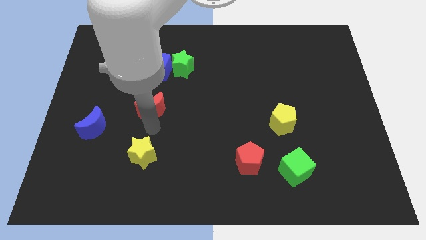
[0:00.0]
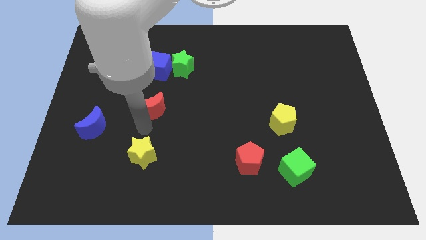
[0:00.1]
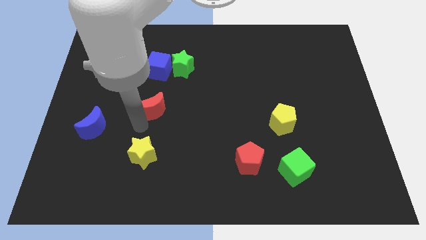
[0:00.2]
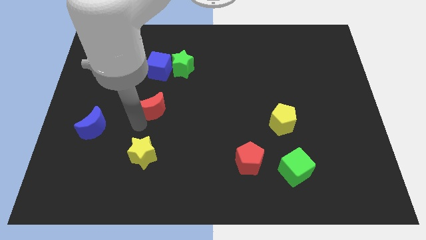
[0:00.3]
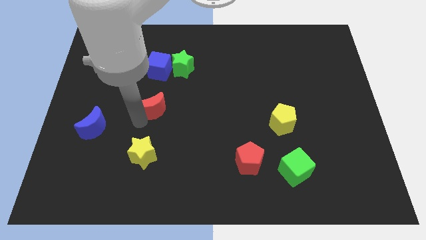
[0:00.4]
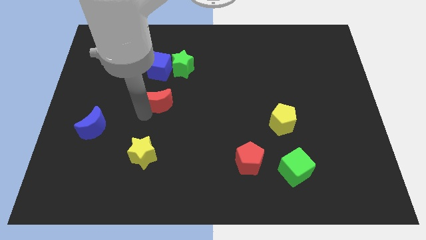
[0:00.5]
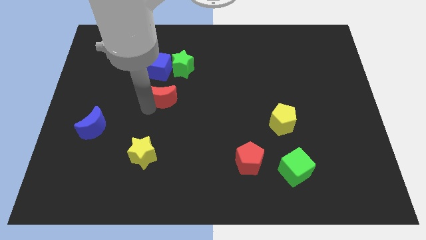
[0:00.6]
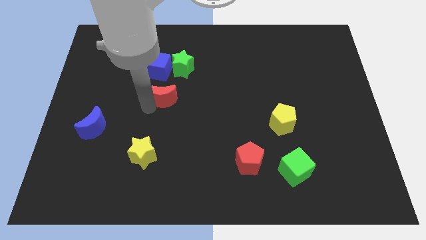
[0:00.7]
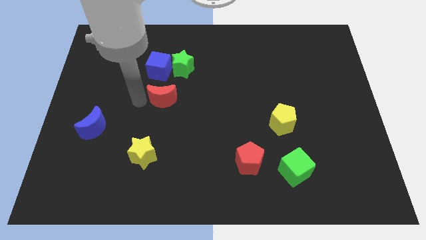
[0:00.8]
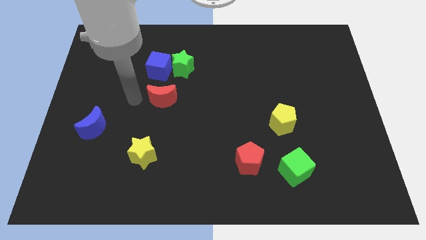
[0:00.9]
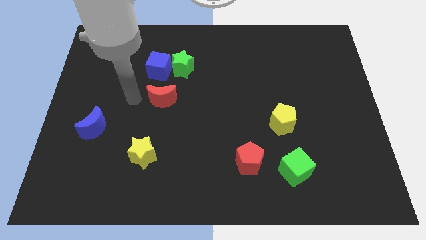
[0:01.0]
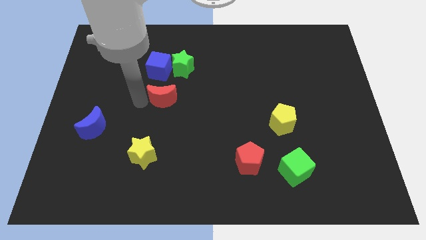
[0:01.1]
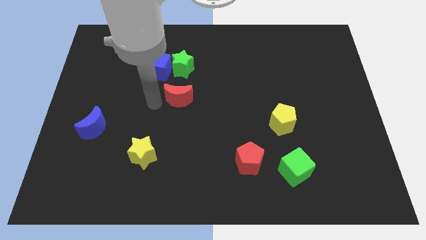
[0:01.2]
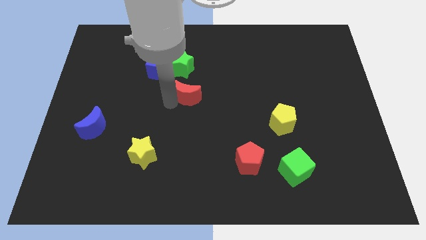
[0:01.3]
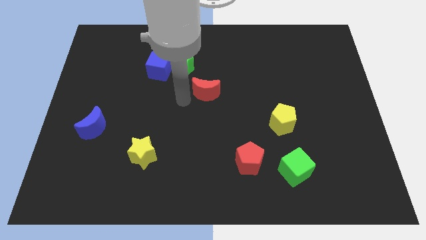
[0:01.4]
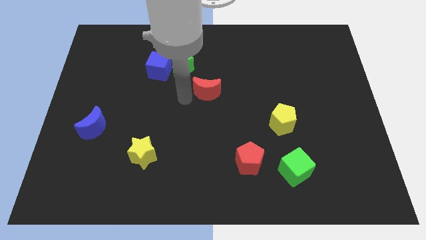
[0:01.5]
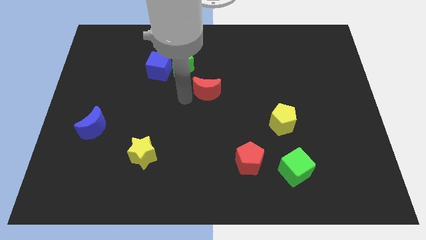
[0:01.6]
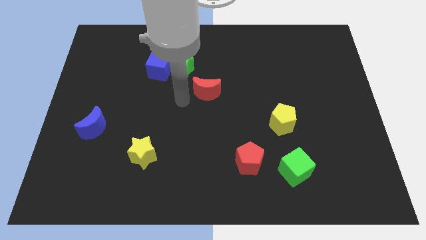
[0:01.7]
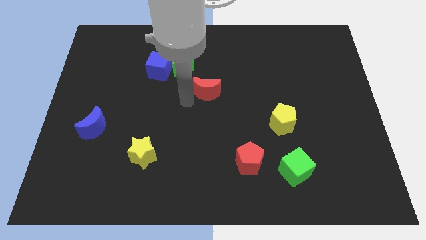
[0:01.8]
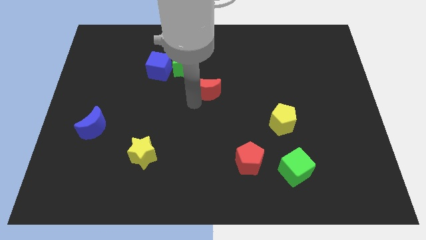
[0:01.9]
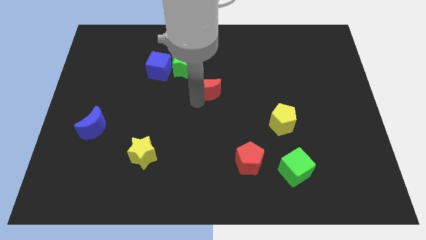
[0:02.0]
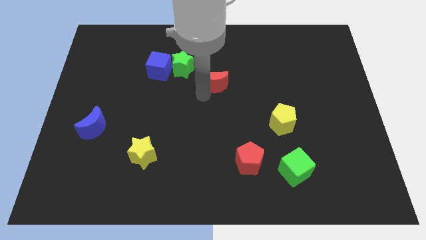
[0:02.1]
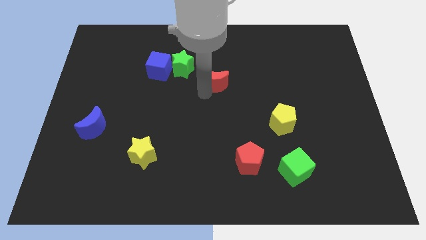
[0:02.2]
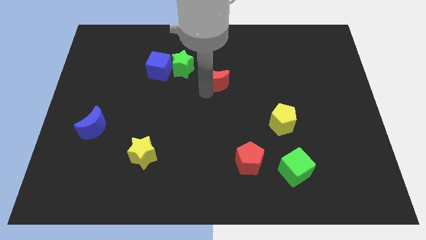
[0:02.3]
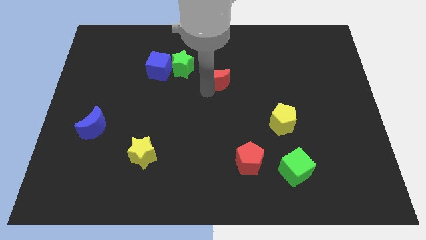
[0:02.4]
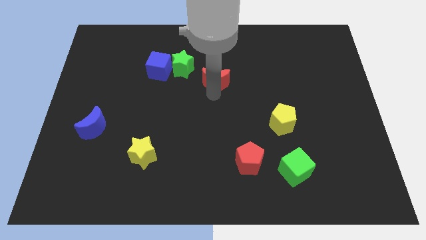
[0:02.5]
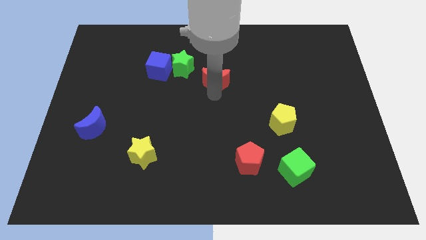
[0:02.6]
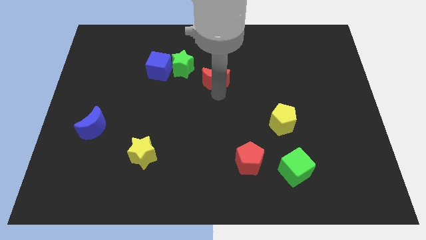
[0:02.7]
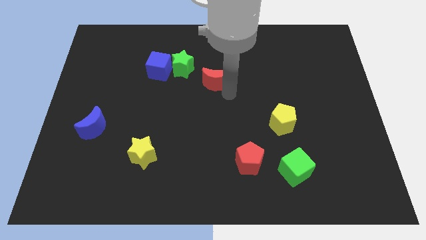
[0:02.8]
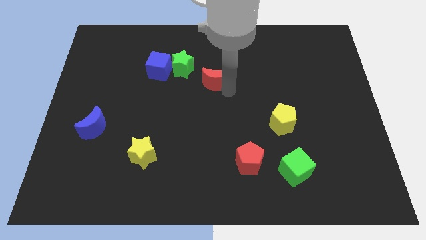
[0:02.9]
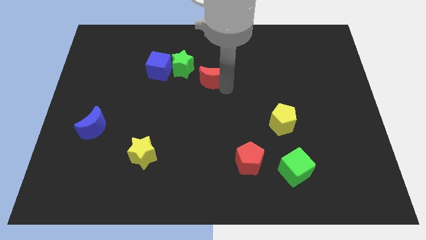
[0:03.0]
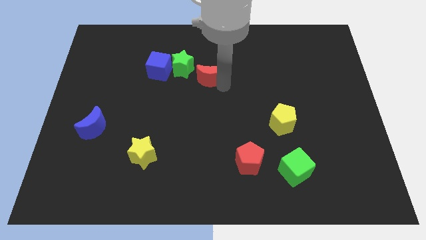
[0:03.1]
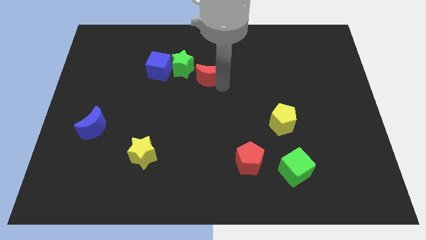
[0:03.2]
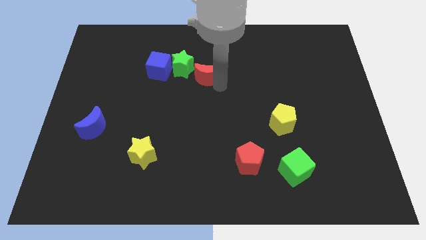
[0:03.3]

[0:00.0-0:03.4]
move the red moon right to the green star

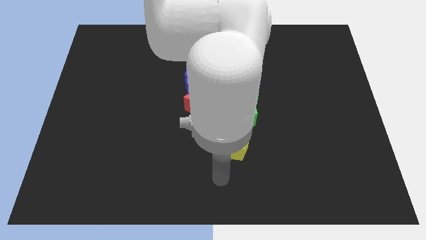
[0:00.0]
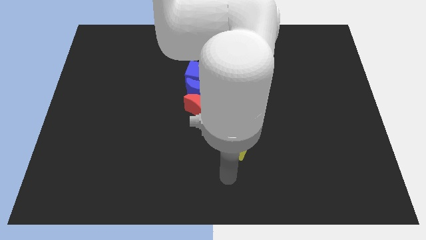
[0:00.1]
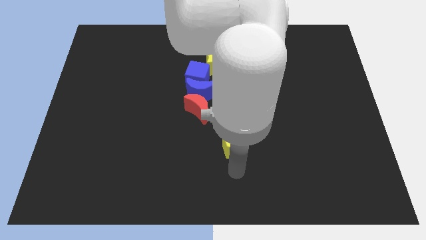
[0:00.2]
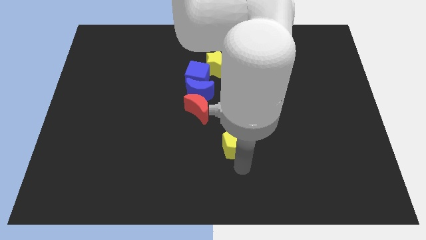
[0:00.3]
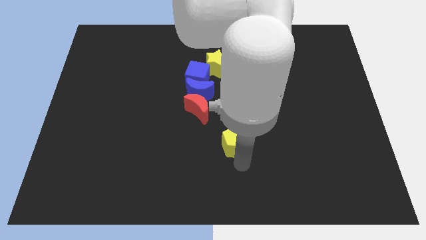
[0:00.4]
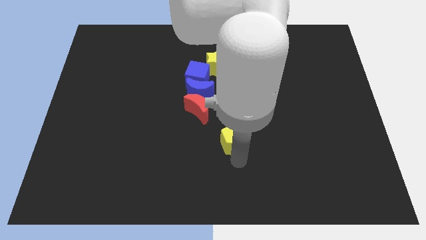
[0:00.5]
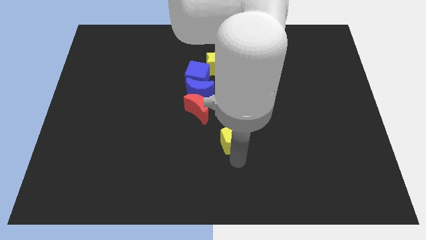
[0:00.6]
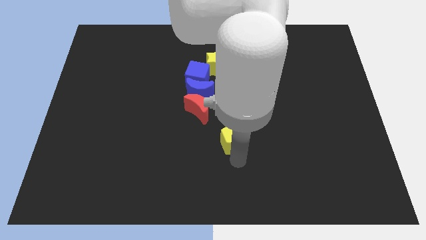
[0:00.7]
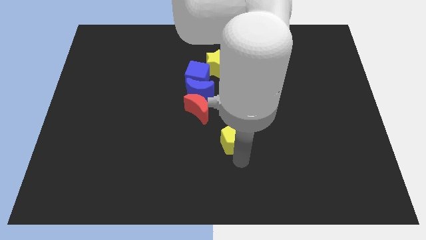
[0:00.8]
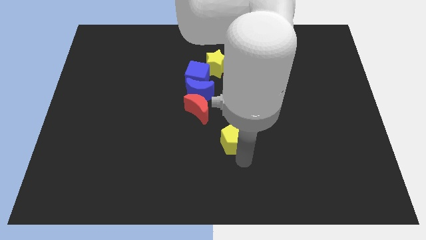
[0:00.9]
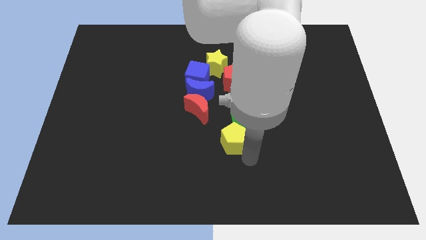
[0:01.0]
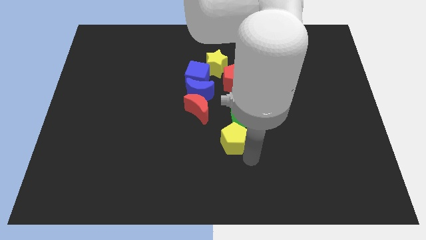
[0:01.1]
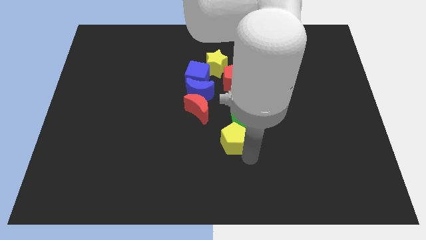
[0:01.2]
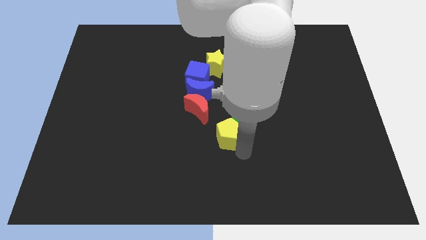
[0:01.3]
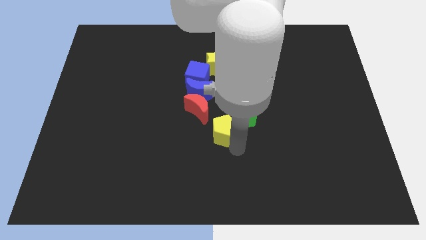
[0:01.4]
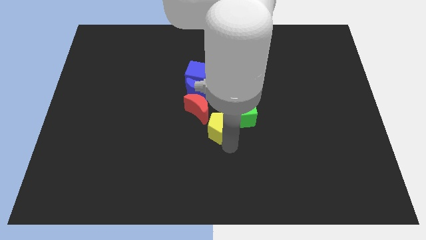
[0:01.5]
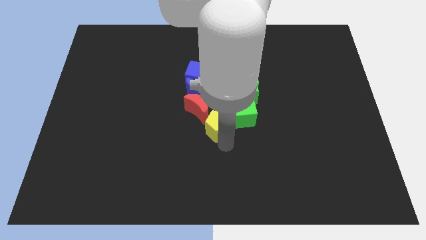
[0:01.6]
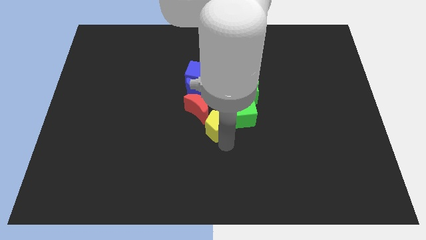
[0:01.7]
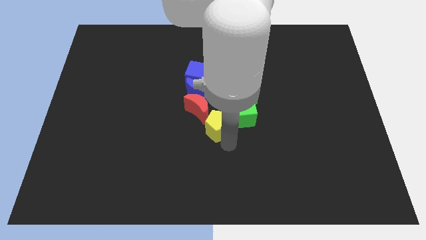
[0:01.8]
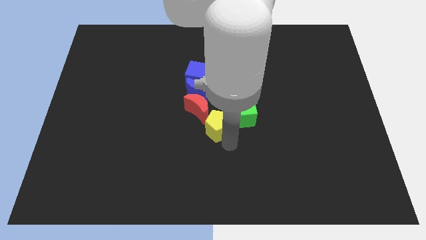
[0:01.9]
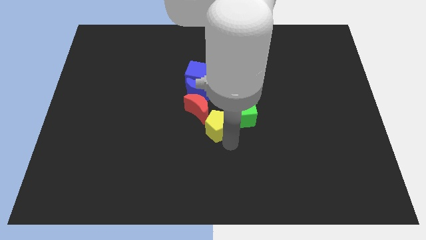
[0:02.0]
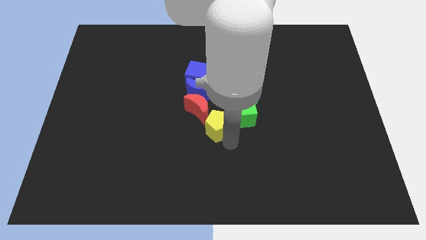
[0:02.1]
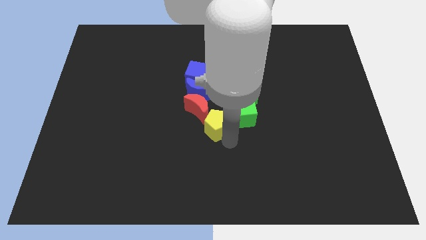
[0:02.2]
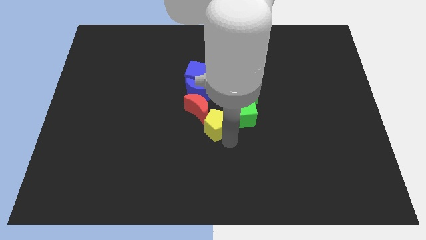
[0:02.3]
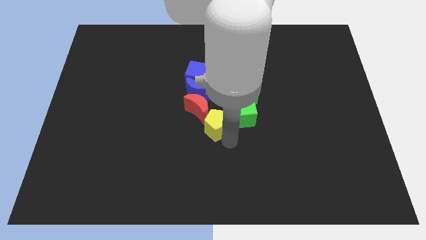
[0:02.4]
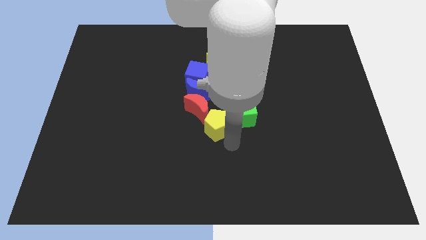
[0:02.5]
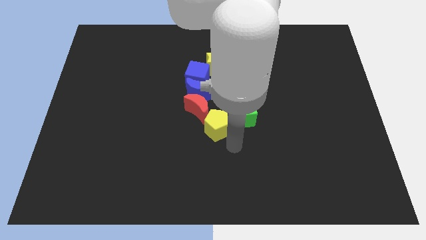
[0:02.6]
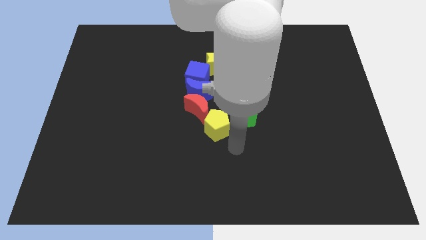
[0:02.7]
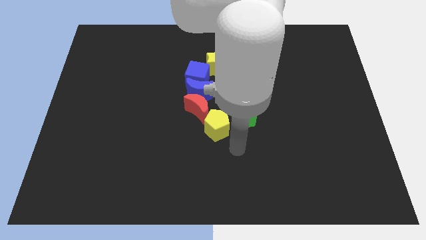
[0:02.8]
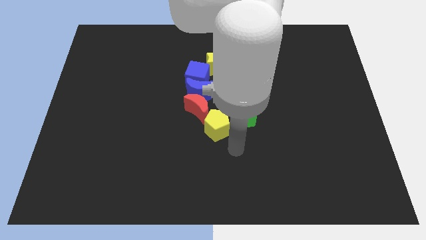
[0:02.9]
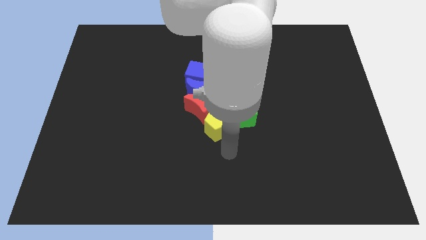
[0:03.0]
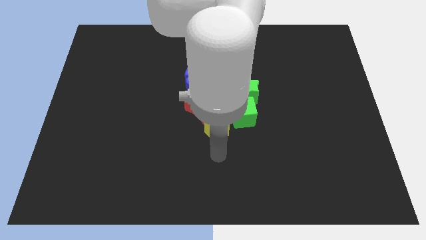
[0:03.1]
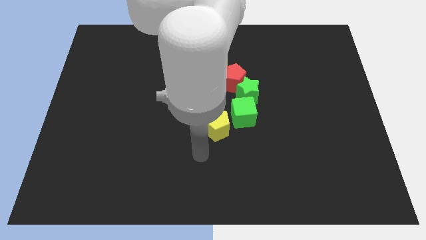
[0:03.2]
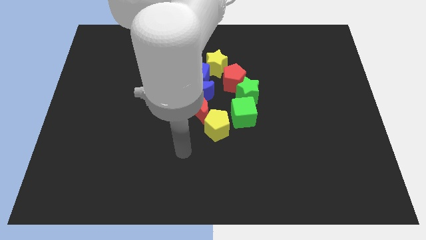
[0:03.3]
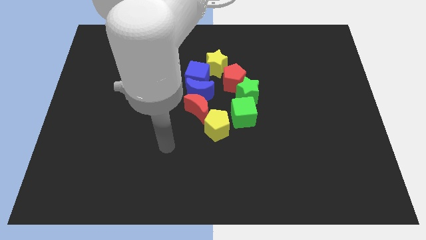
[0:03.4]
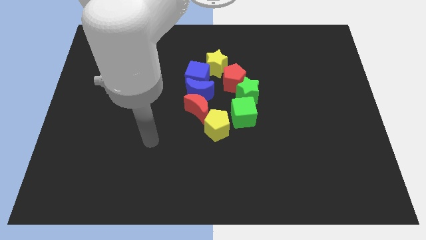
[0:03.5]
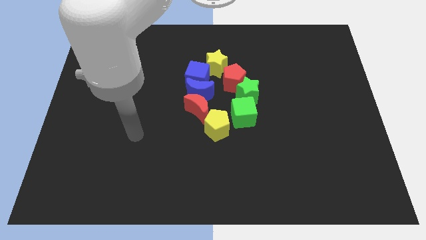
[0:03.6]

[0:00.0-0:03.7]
move yellow pentagon below right to red moon

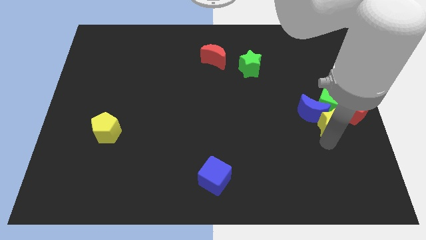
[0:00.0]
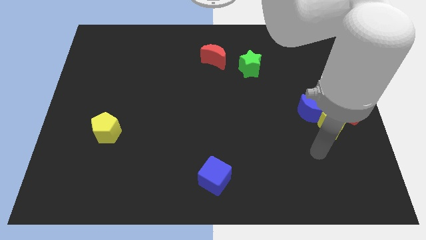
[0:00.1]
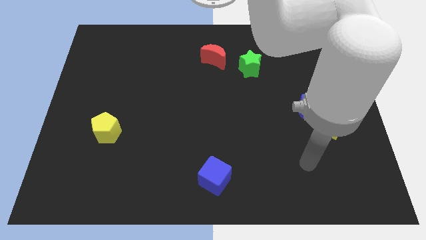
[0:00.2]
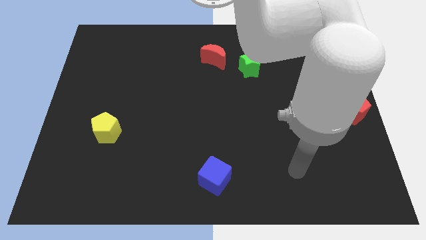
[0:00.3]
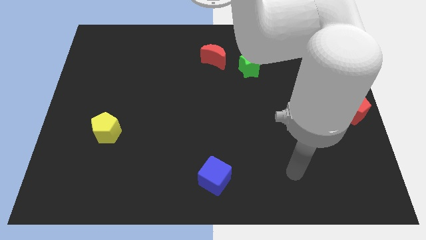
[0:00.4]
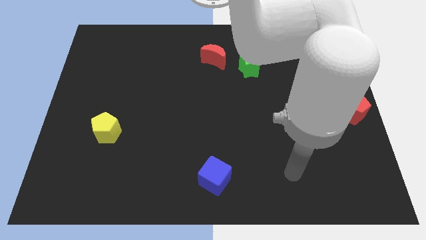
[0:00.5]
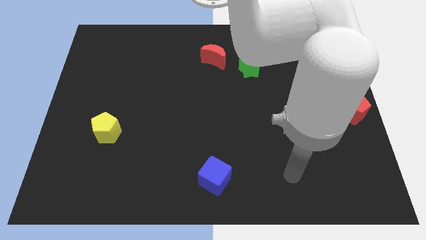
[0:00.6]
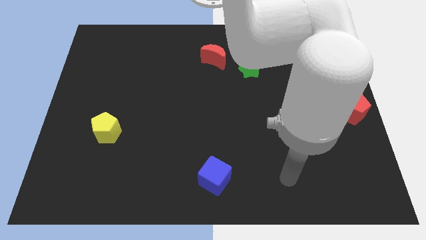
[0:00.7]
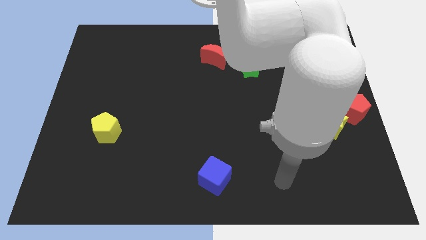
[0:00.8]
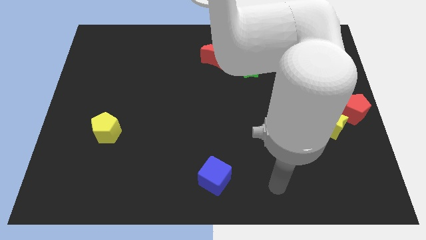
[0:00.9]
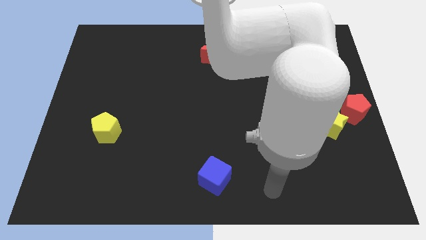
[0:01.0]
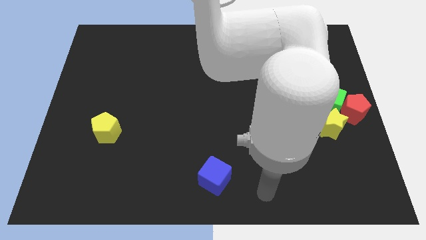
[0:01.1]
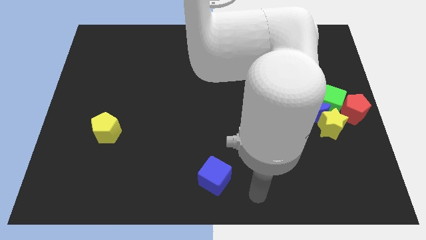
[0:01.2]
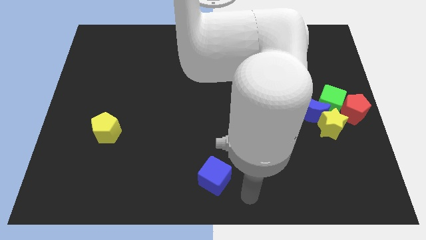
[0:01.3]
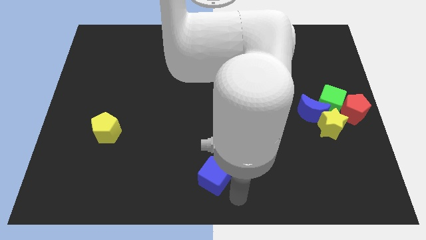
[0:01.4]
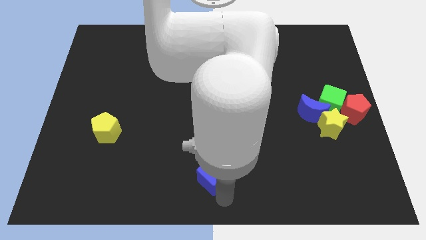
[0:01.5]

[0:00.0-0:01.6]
move the arm away from the yellow star

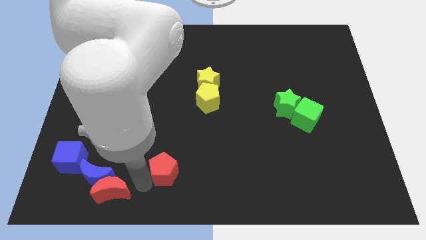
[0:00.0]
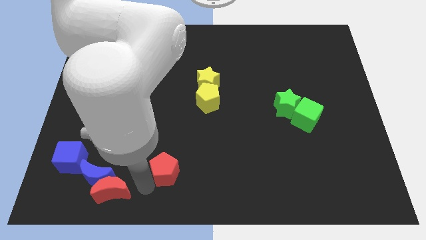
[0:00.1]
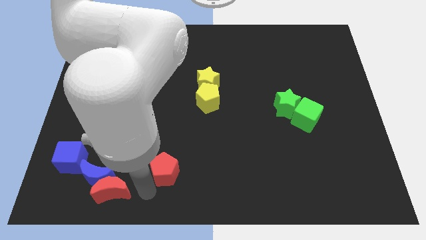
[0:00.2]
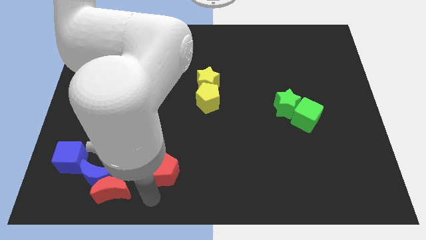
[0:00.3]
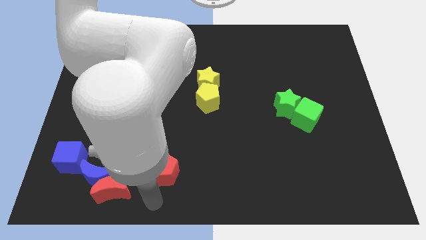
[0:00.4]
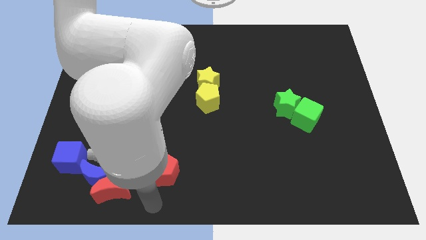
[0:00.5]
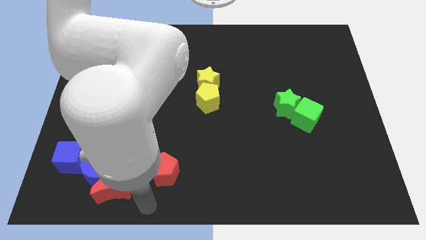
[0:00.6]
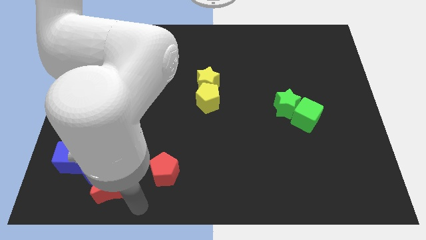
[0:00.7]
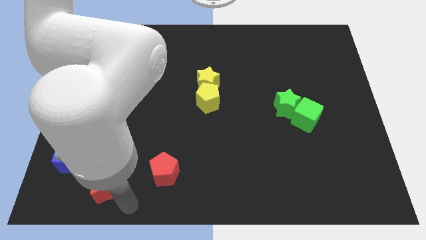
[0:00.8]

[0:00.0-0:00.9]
move the arm towards red crescent
